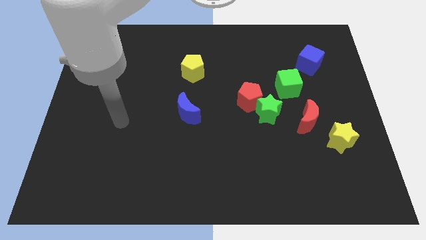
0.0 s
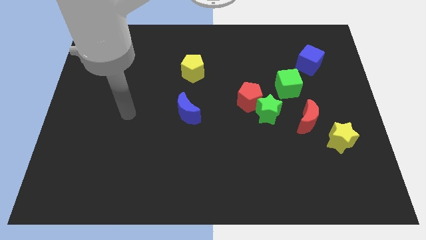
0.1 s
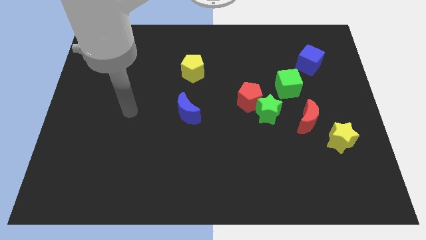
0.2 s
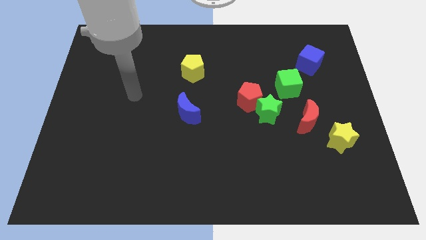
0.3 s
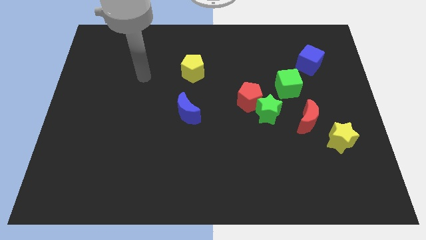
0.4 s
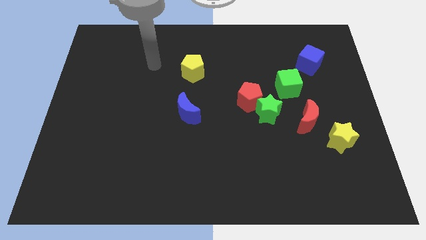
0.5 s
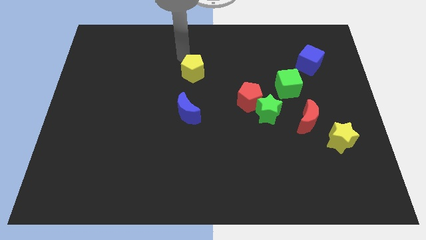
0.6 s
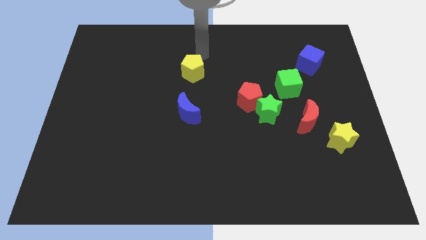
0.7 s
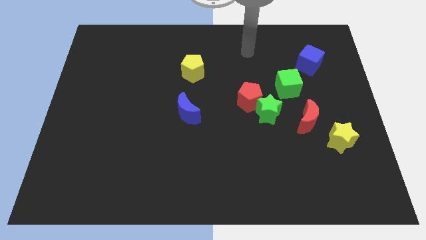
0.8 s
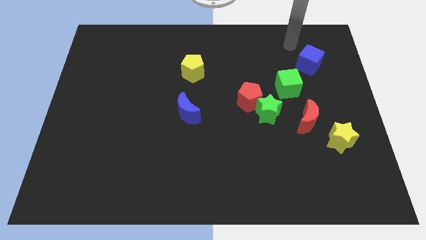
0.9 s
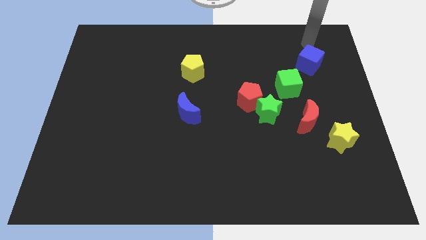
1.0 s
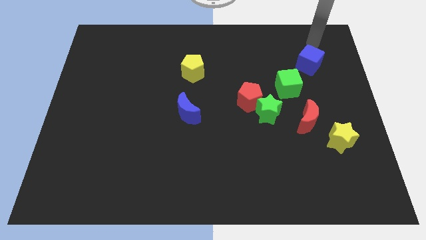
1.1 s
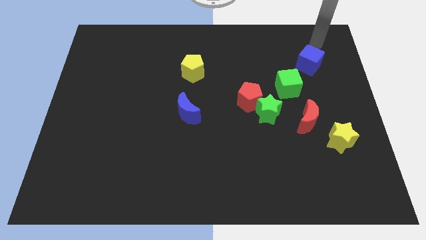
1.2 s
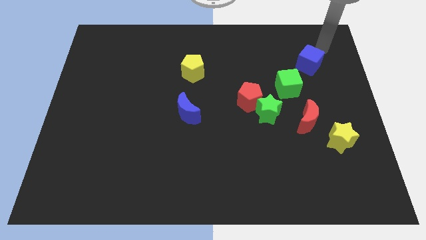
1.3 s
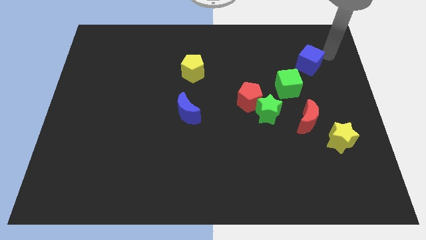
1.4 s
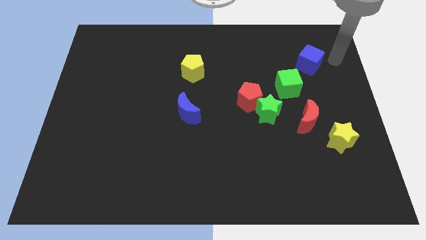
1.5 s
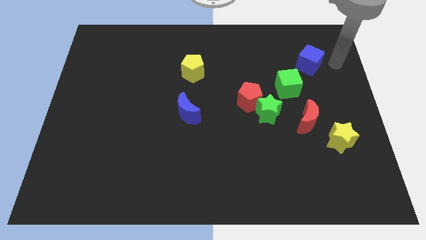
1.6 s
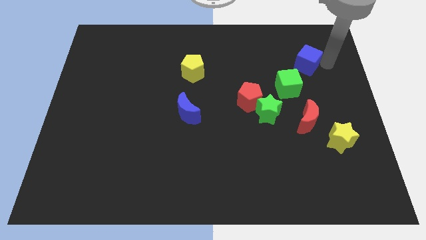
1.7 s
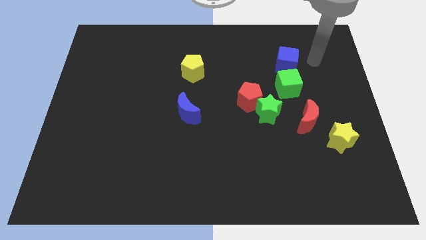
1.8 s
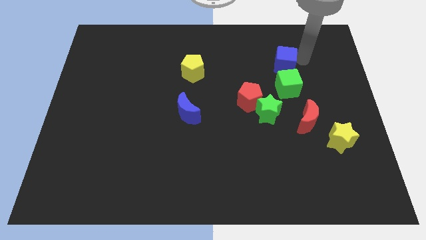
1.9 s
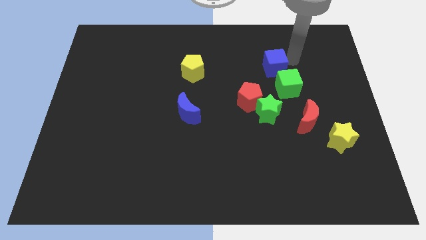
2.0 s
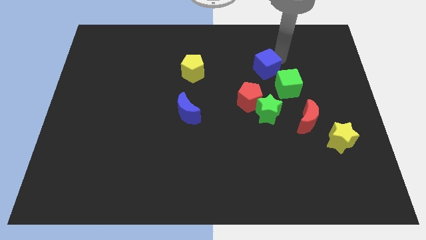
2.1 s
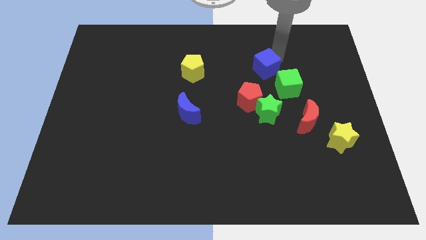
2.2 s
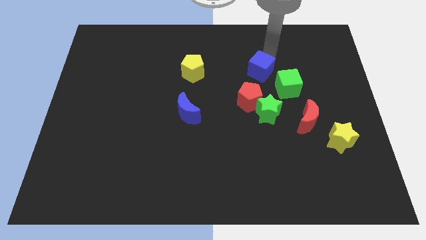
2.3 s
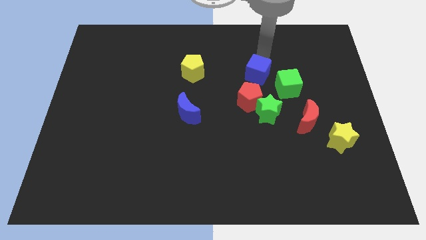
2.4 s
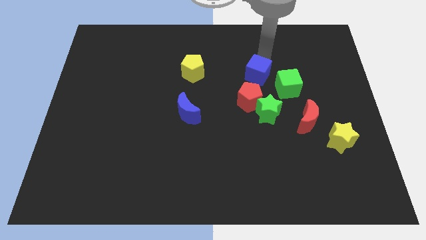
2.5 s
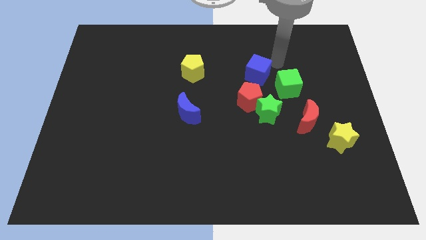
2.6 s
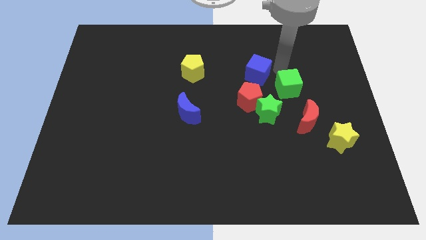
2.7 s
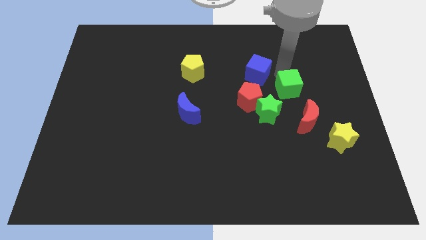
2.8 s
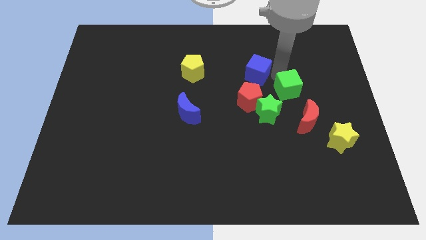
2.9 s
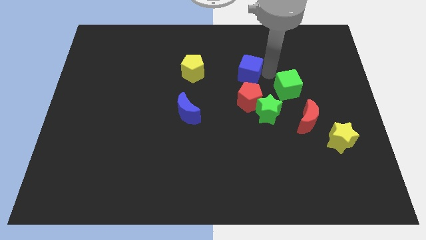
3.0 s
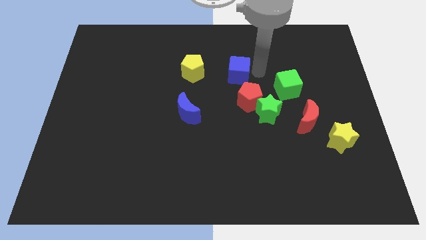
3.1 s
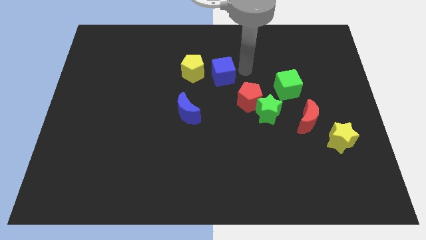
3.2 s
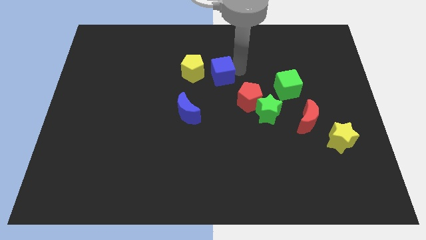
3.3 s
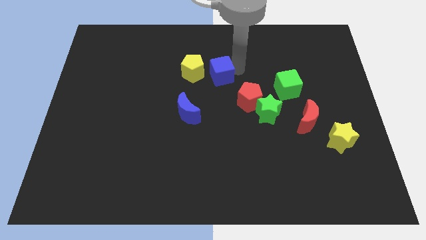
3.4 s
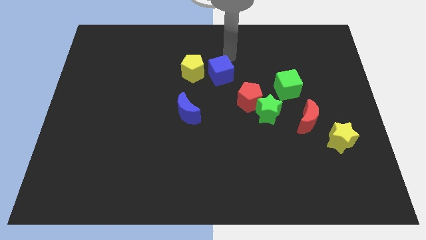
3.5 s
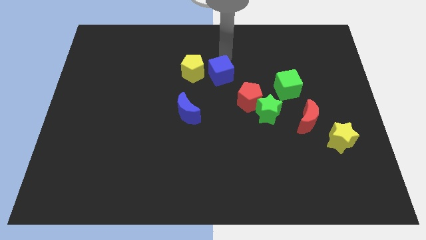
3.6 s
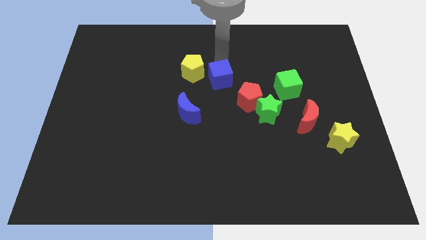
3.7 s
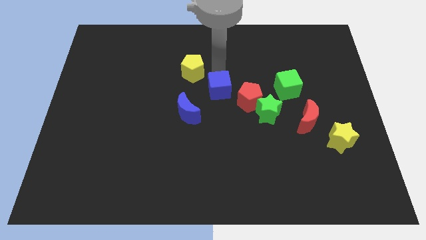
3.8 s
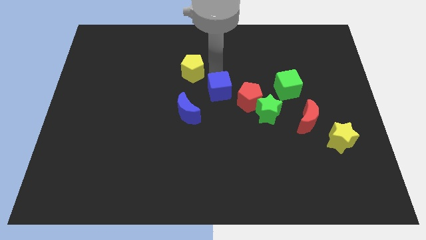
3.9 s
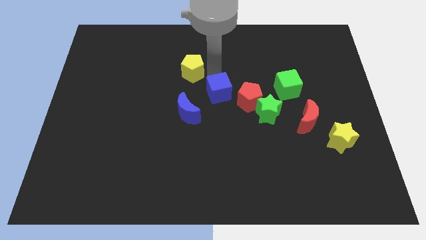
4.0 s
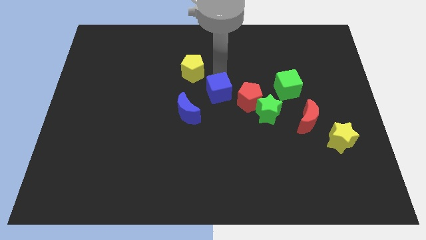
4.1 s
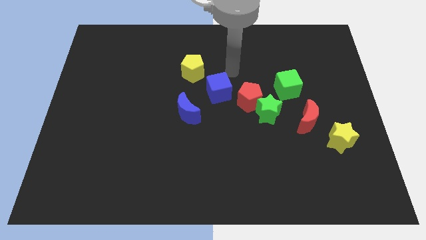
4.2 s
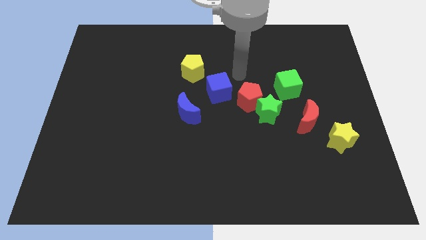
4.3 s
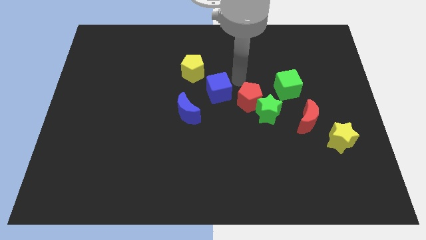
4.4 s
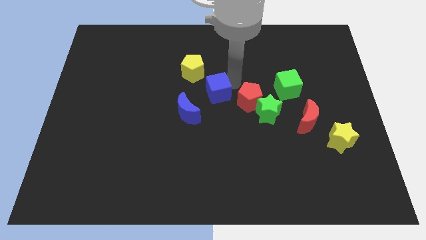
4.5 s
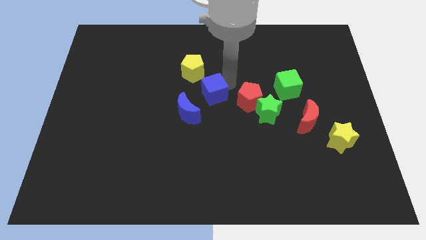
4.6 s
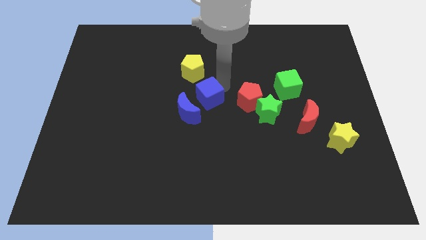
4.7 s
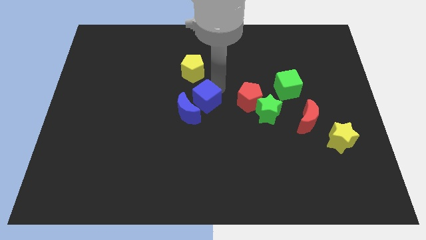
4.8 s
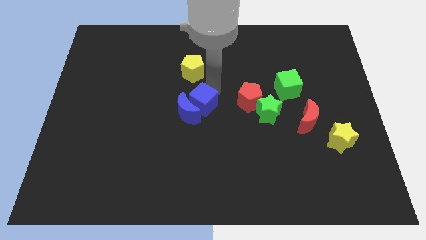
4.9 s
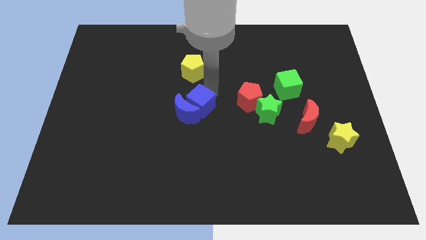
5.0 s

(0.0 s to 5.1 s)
push the blue cube to the blue moon

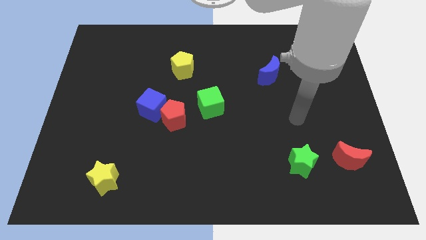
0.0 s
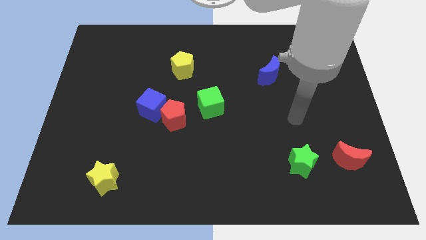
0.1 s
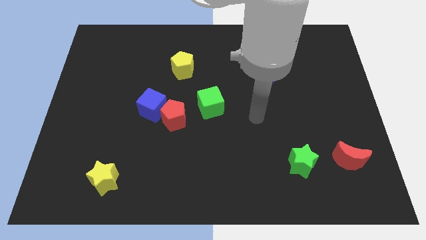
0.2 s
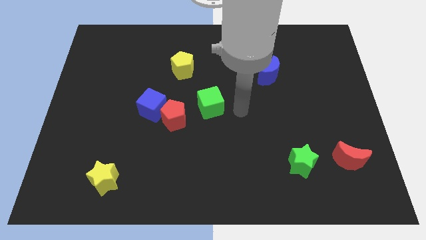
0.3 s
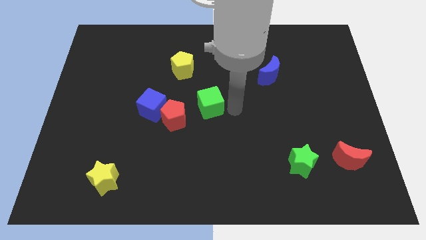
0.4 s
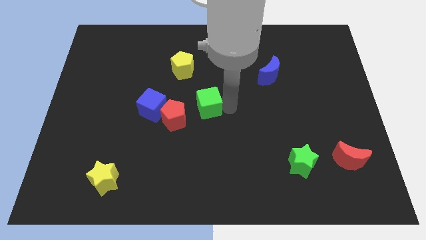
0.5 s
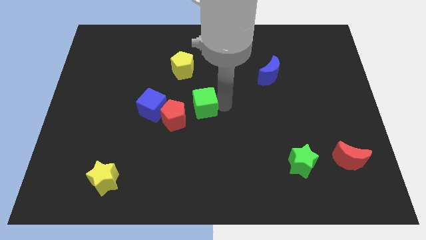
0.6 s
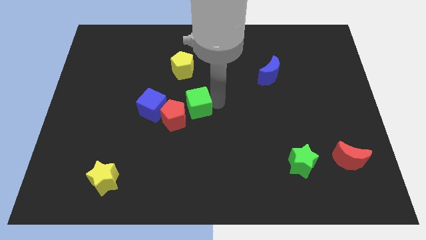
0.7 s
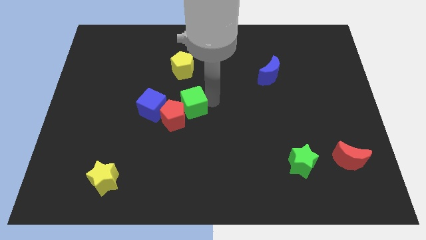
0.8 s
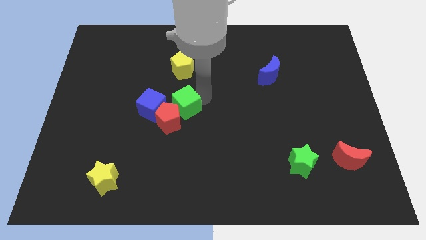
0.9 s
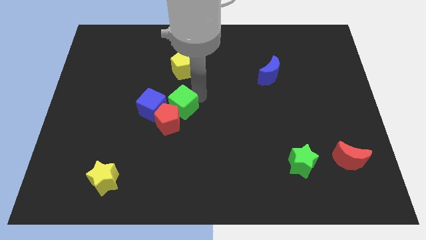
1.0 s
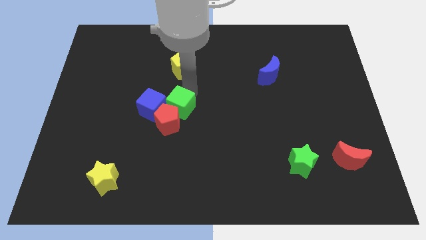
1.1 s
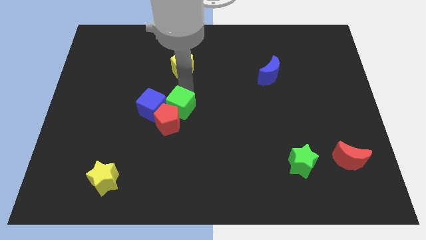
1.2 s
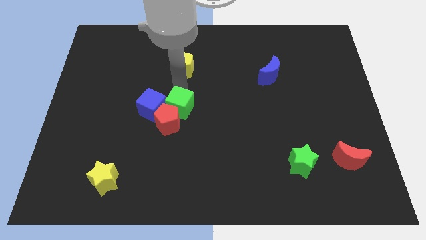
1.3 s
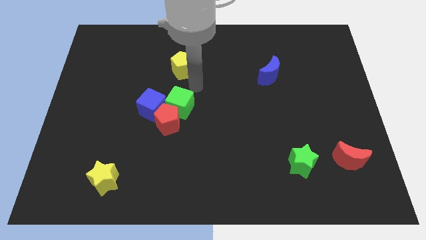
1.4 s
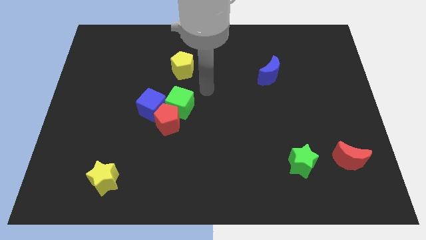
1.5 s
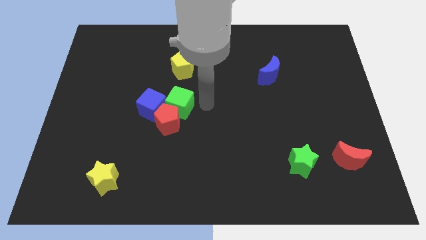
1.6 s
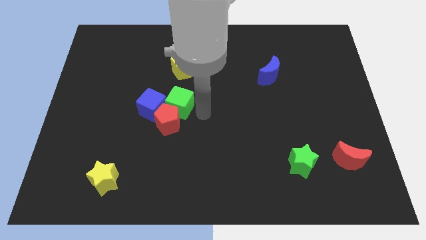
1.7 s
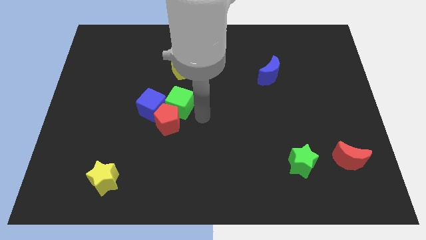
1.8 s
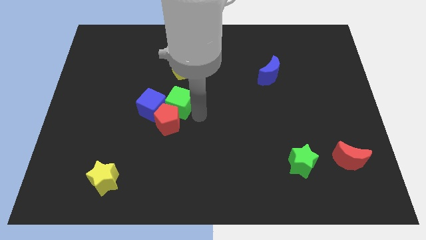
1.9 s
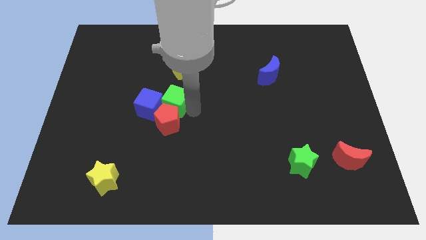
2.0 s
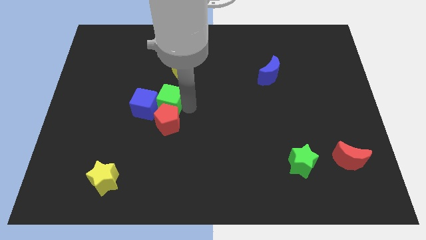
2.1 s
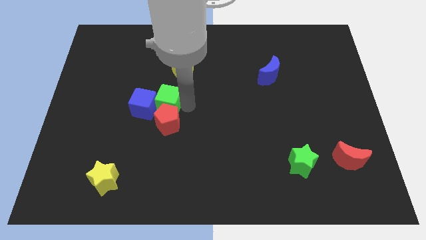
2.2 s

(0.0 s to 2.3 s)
slide the green cube towards the blue cube

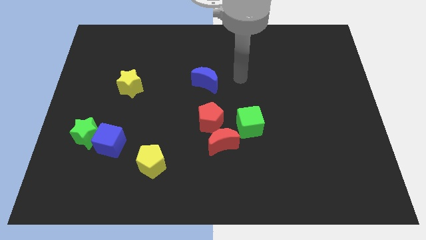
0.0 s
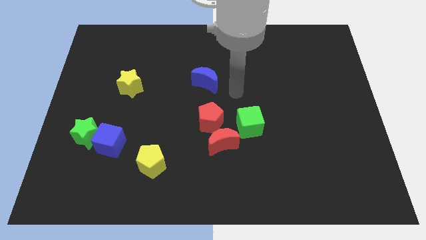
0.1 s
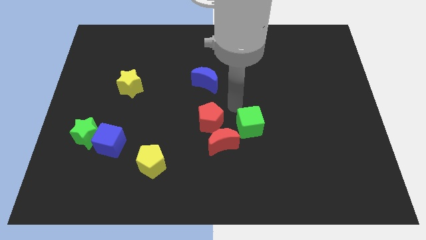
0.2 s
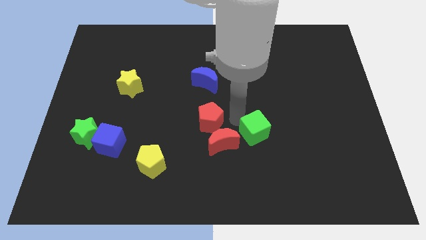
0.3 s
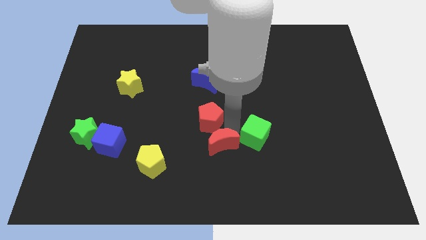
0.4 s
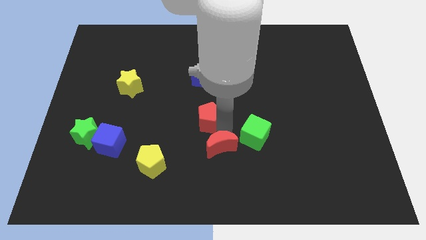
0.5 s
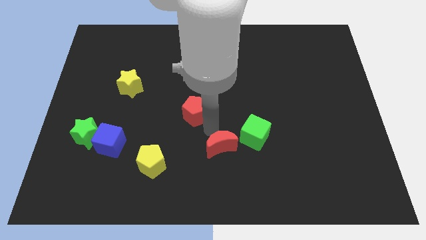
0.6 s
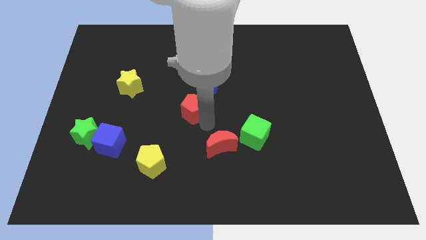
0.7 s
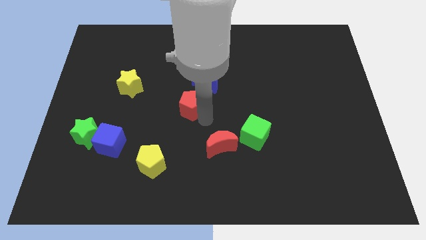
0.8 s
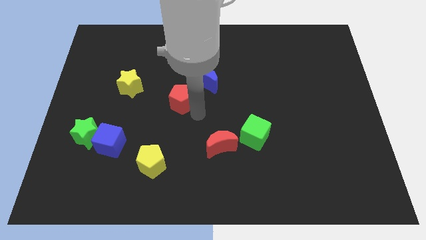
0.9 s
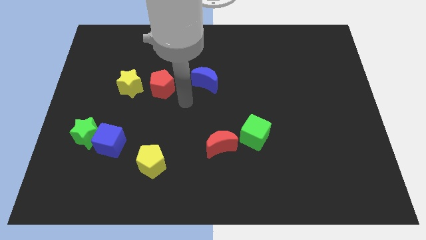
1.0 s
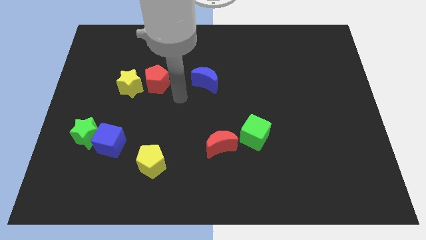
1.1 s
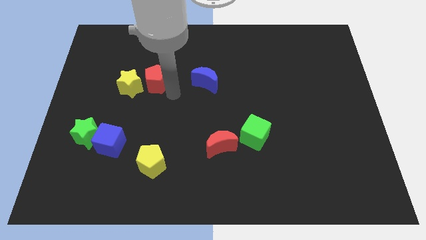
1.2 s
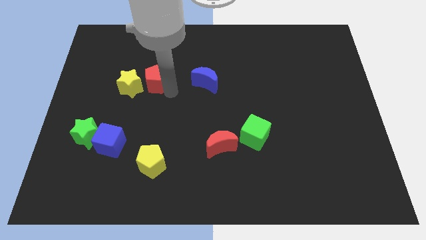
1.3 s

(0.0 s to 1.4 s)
move the red pentagon next to the yellow star
